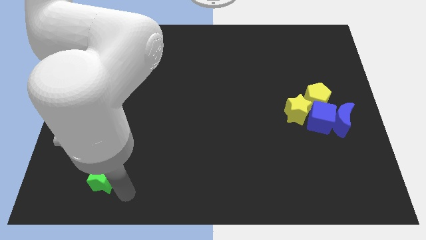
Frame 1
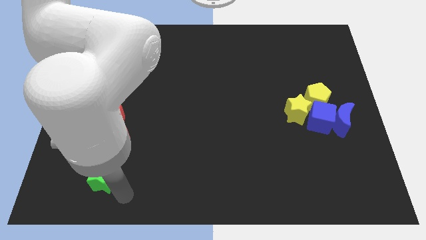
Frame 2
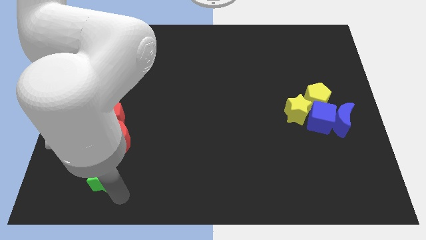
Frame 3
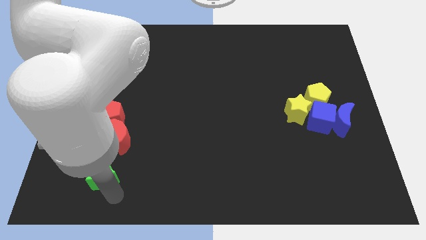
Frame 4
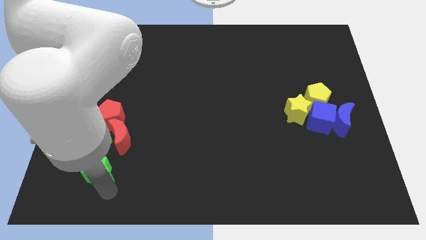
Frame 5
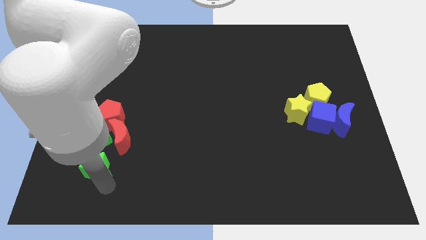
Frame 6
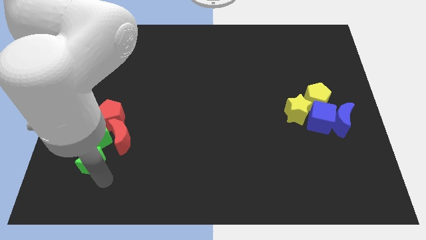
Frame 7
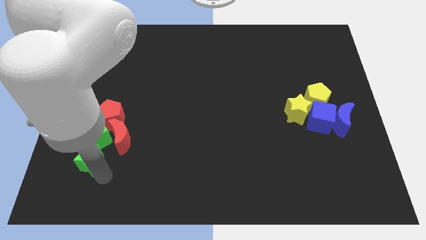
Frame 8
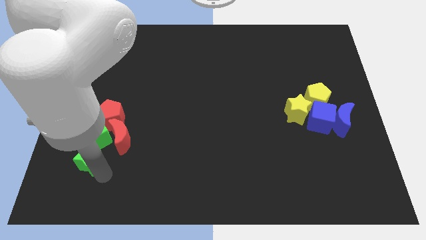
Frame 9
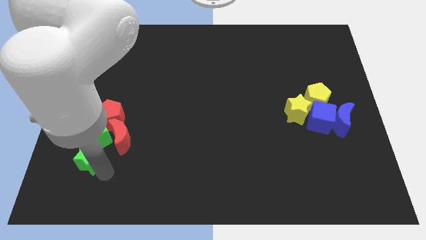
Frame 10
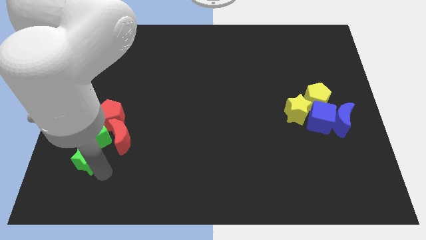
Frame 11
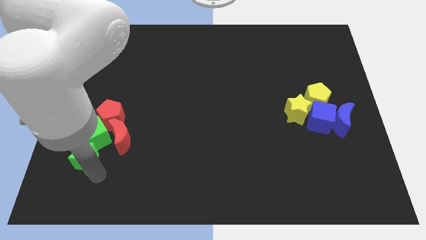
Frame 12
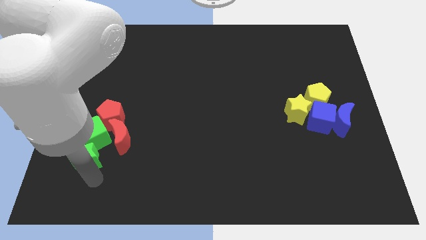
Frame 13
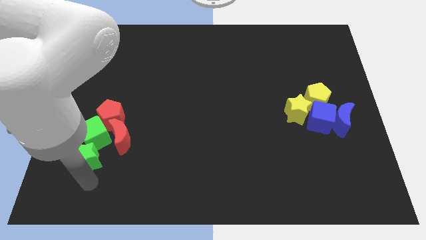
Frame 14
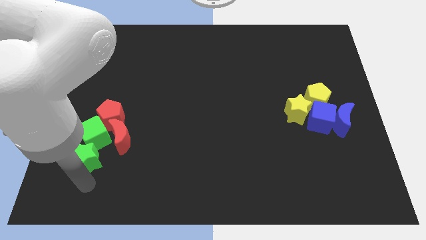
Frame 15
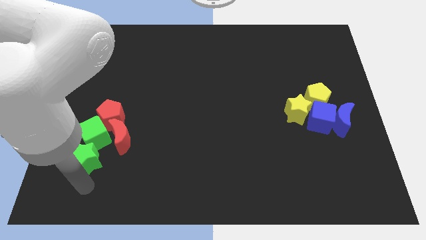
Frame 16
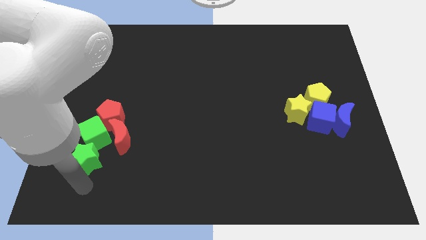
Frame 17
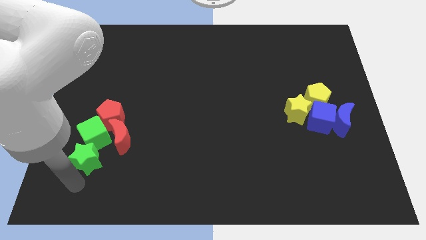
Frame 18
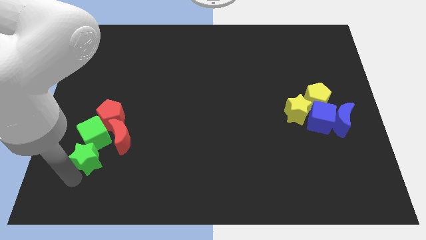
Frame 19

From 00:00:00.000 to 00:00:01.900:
move the green star to the bottom of the green cube

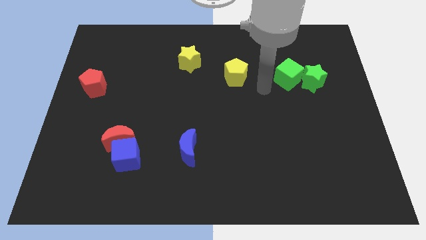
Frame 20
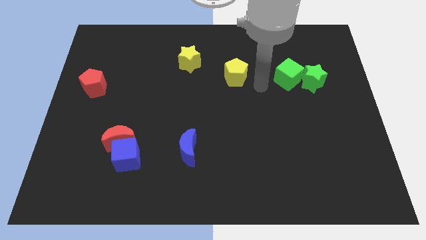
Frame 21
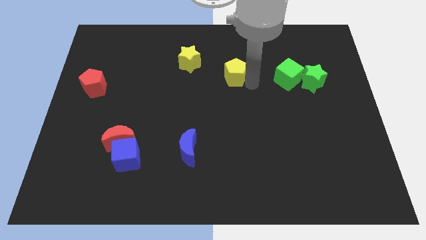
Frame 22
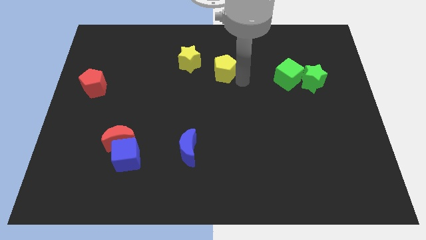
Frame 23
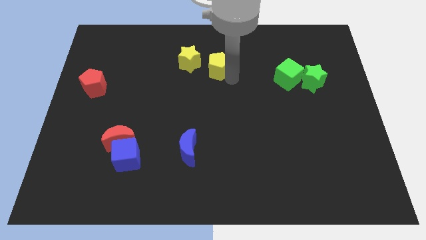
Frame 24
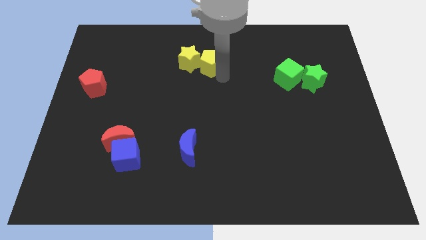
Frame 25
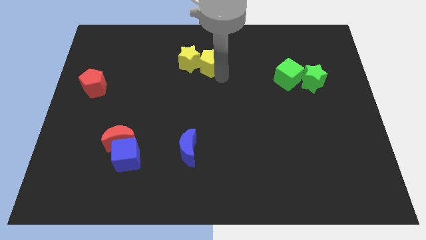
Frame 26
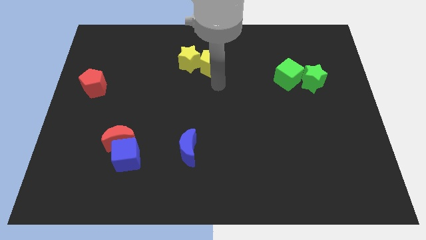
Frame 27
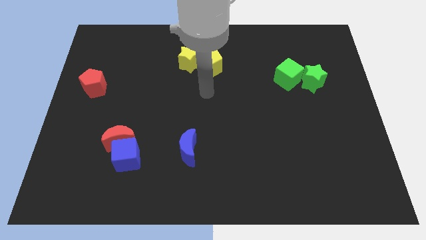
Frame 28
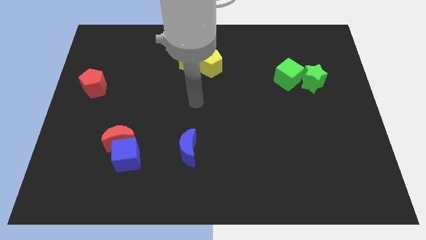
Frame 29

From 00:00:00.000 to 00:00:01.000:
move the yellow pentagon to the right of the yellow star

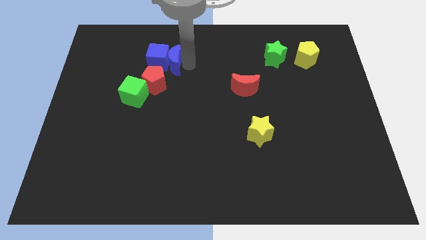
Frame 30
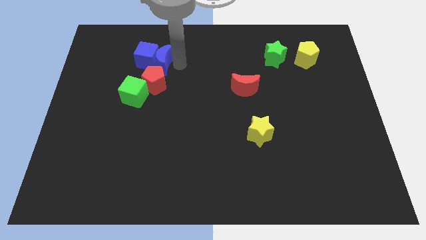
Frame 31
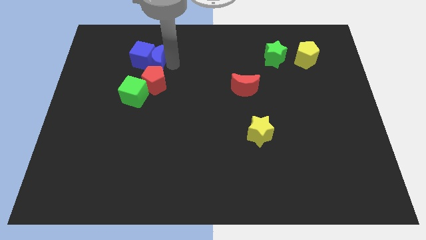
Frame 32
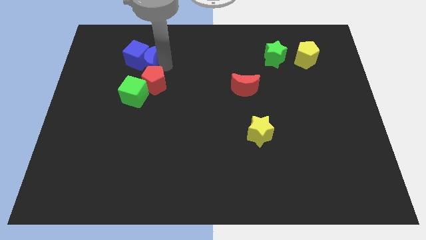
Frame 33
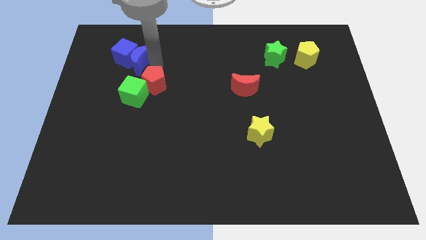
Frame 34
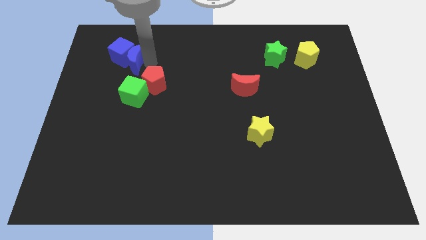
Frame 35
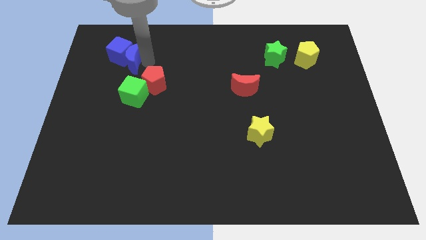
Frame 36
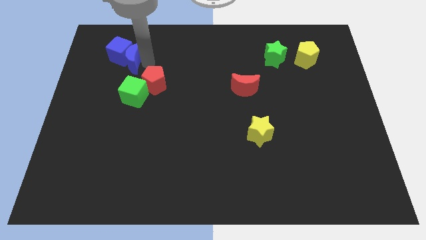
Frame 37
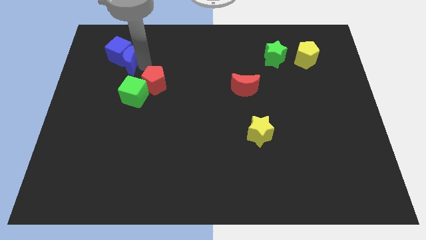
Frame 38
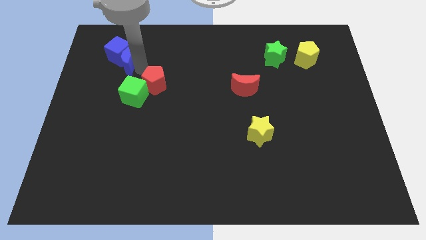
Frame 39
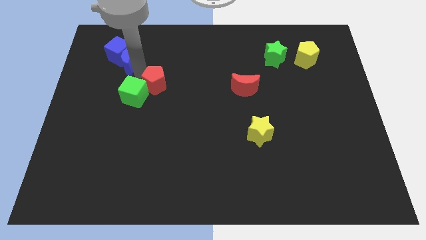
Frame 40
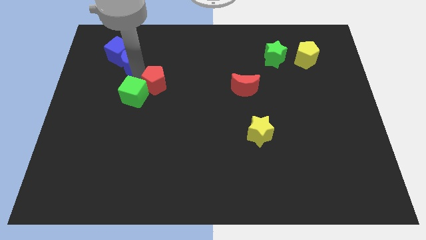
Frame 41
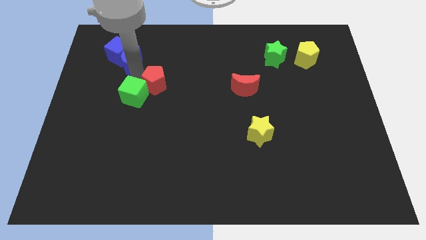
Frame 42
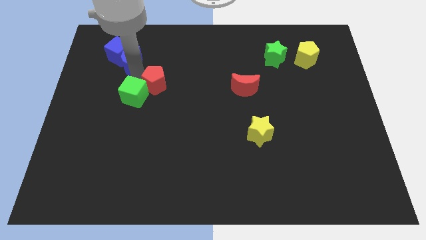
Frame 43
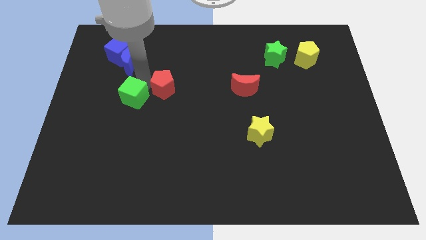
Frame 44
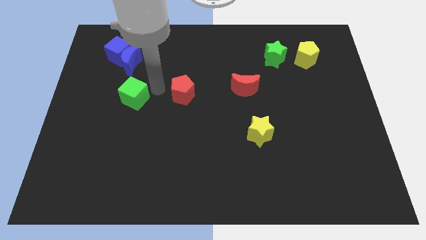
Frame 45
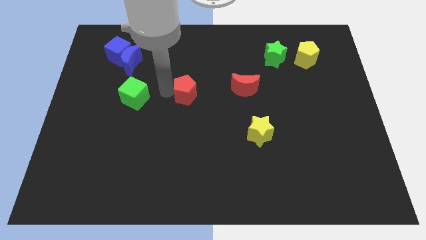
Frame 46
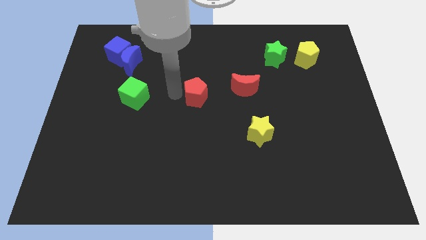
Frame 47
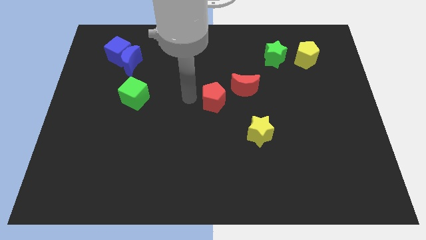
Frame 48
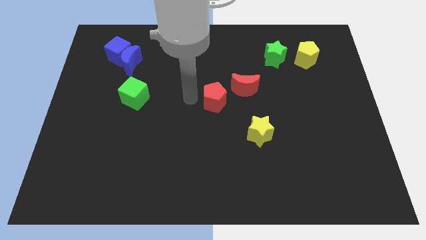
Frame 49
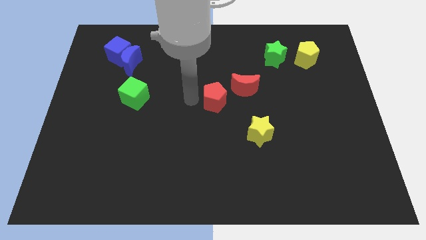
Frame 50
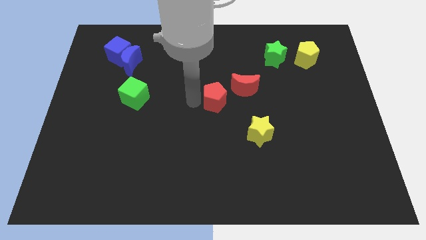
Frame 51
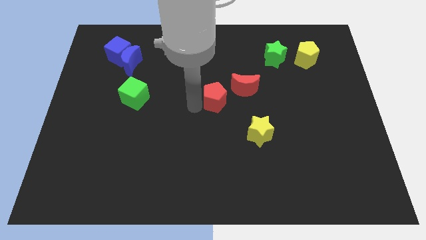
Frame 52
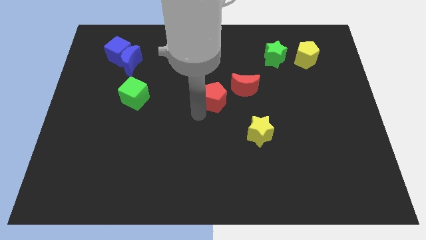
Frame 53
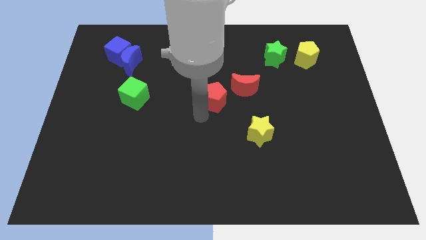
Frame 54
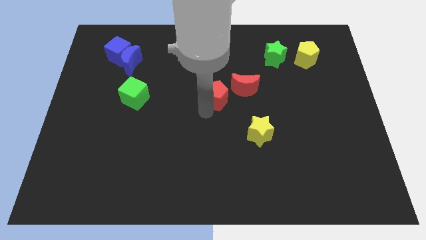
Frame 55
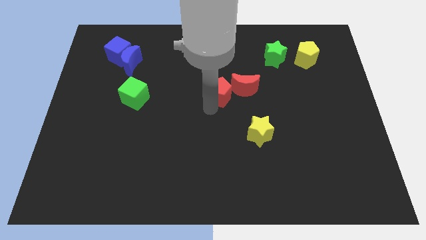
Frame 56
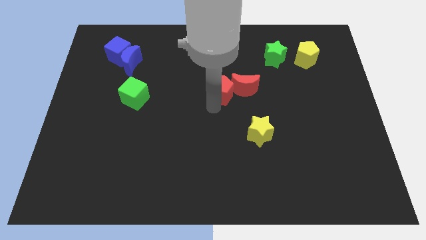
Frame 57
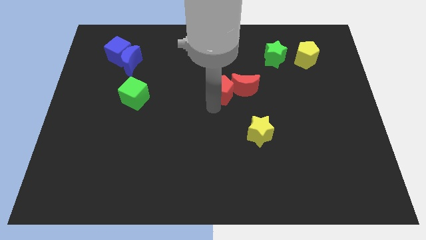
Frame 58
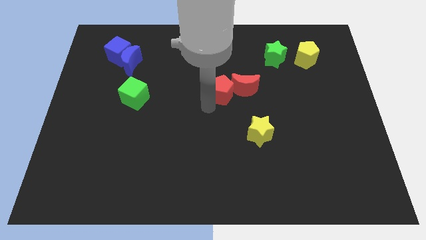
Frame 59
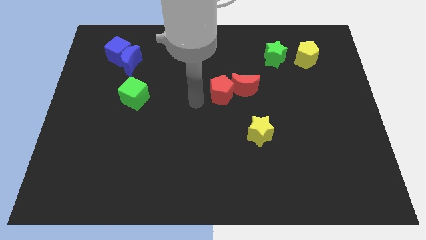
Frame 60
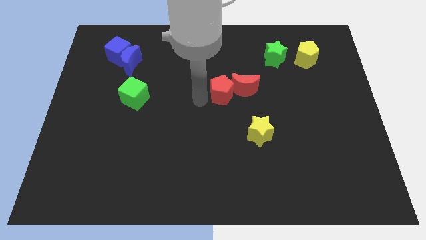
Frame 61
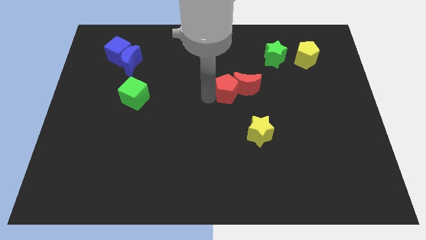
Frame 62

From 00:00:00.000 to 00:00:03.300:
place the red pentagon to the left of the red moon

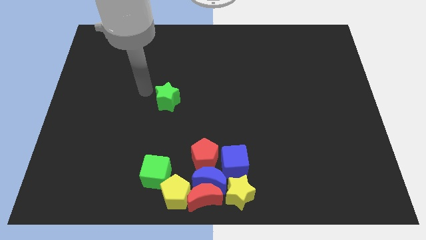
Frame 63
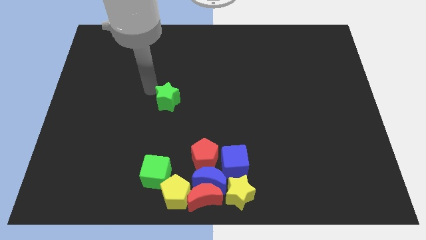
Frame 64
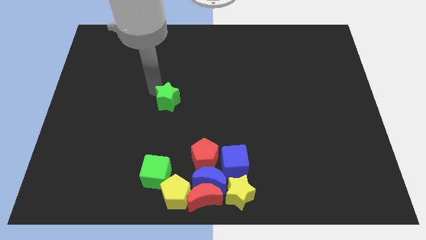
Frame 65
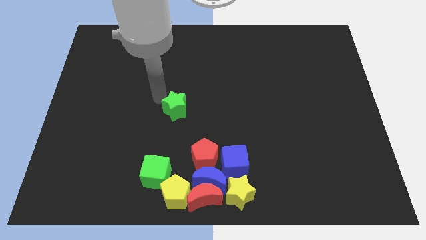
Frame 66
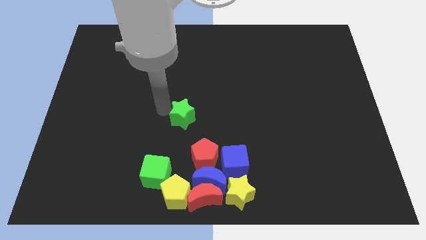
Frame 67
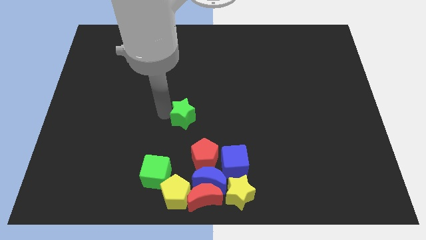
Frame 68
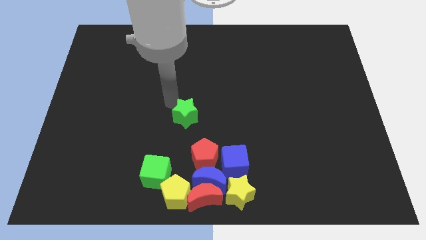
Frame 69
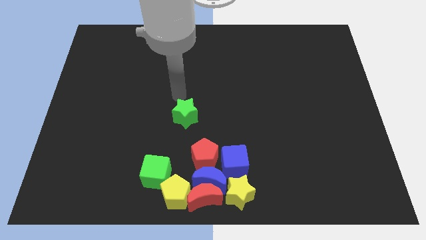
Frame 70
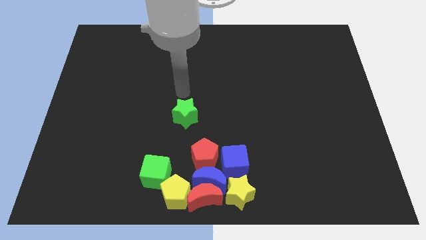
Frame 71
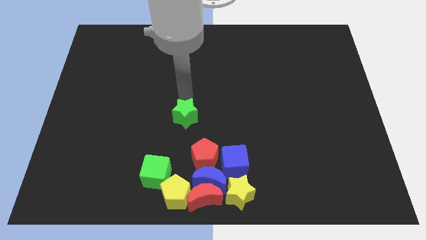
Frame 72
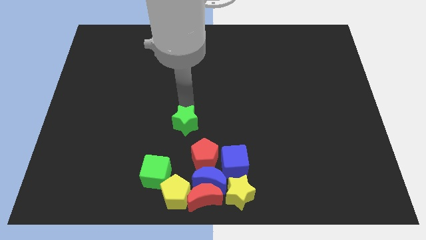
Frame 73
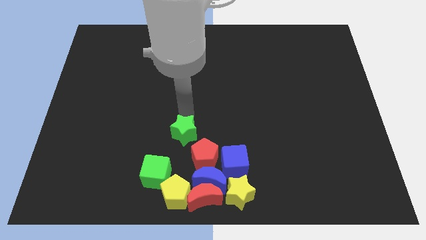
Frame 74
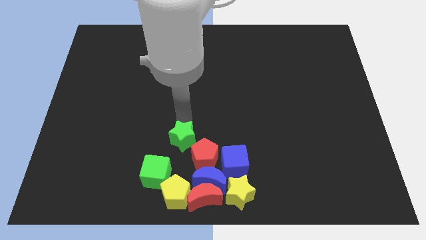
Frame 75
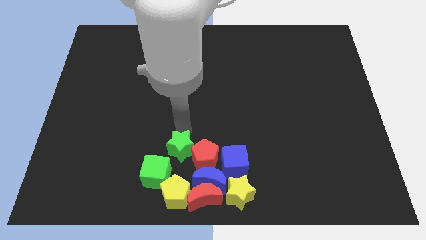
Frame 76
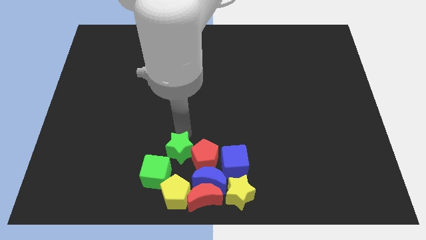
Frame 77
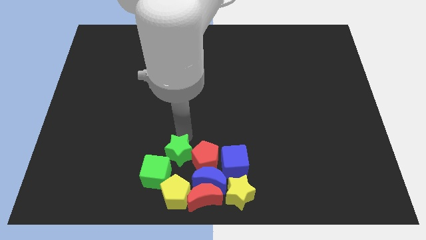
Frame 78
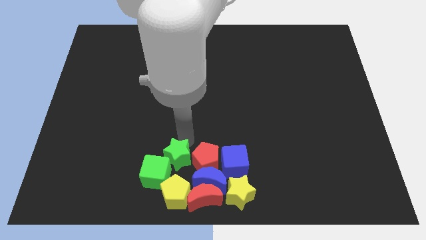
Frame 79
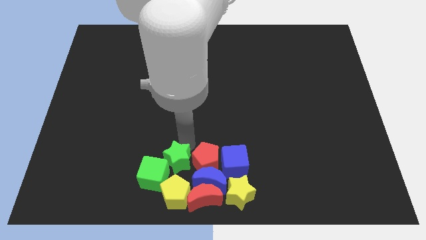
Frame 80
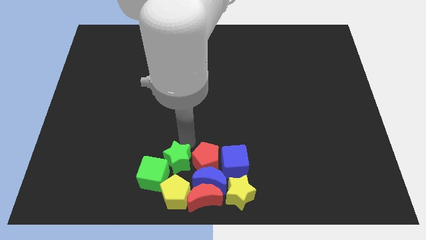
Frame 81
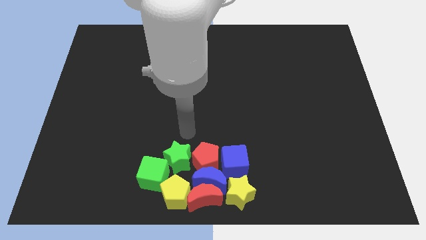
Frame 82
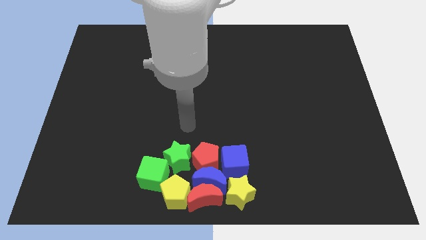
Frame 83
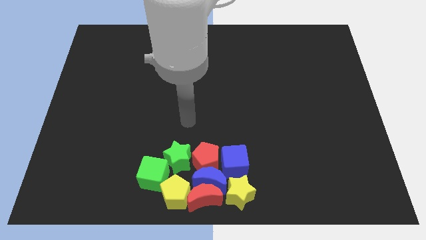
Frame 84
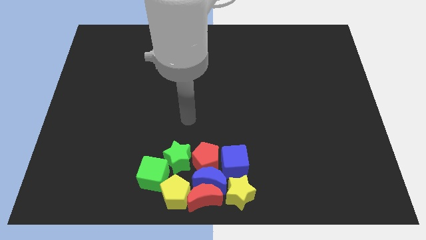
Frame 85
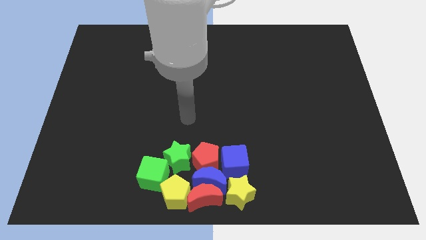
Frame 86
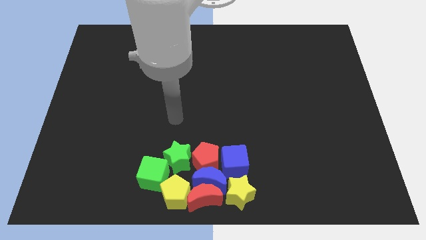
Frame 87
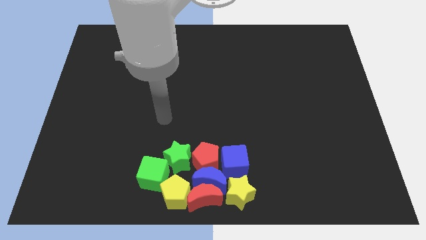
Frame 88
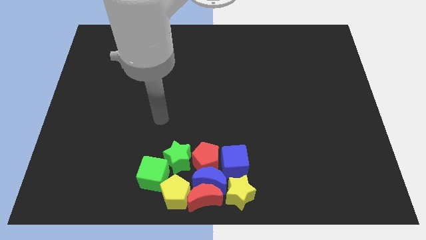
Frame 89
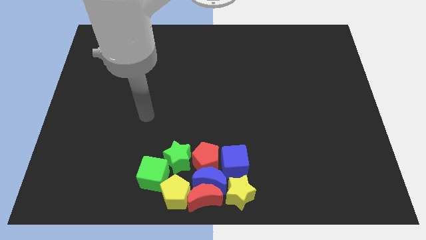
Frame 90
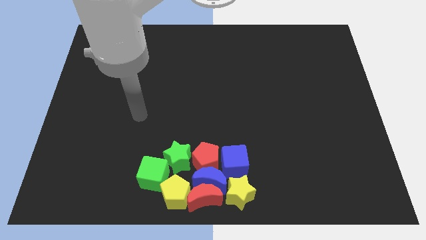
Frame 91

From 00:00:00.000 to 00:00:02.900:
adjust the green star in between green cube and red pentagon
